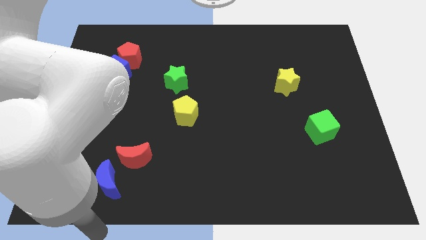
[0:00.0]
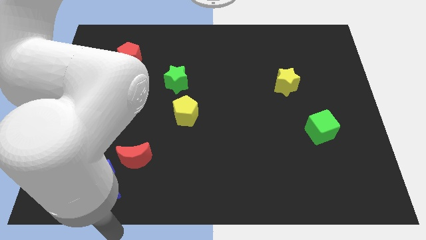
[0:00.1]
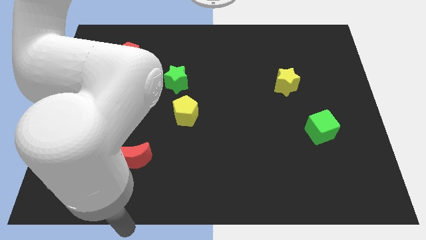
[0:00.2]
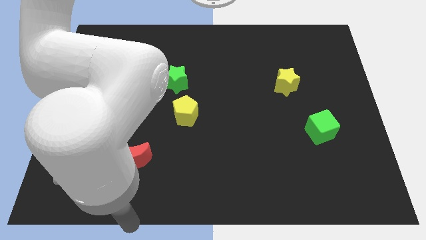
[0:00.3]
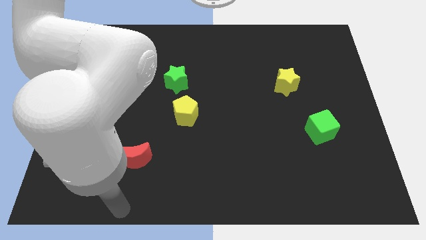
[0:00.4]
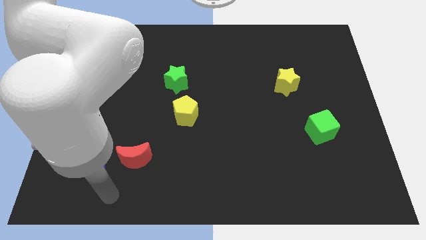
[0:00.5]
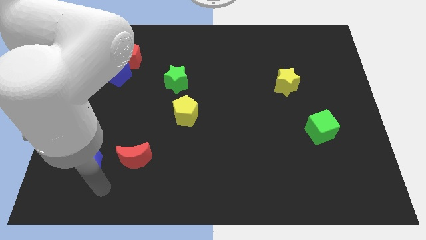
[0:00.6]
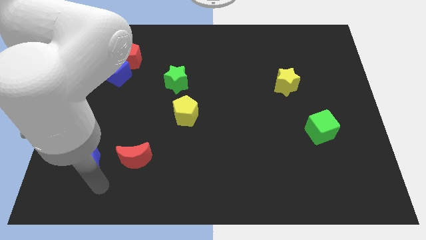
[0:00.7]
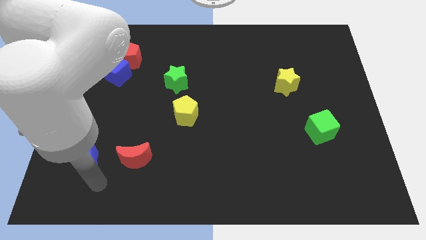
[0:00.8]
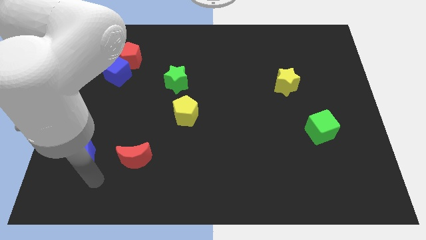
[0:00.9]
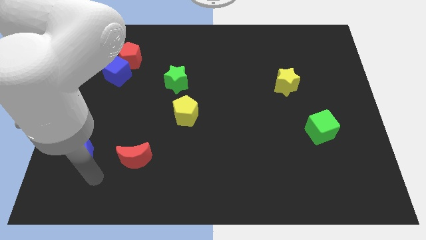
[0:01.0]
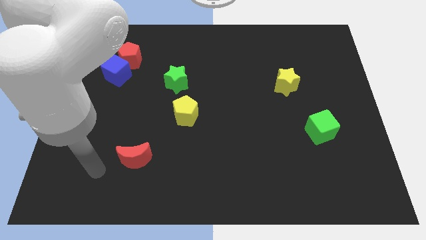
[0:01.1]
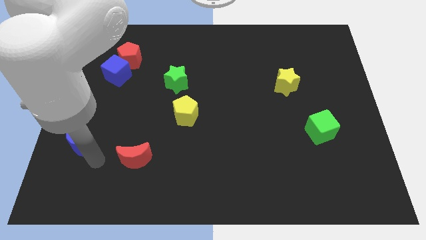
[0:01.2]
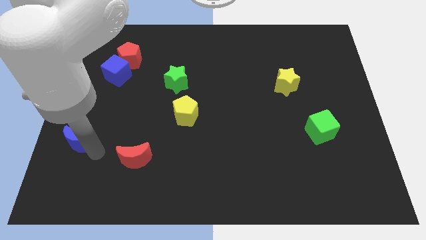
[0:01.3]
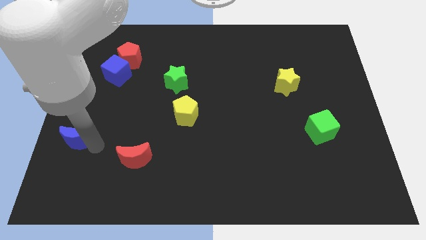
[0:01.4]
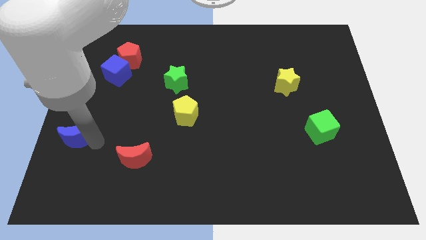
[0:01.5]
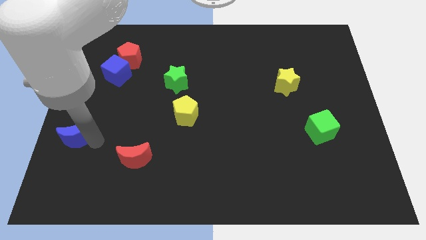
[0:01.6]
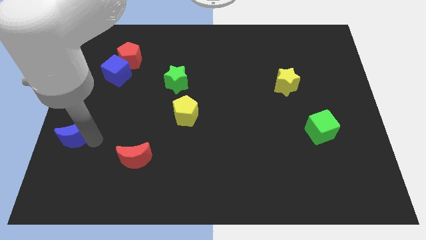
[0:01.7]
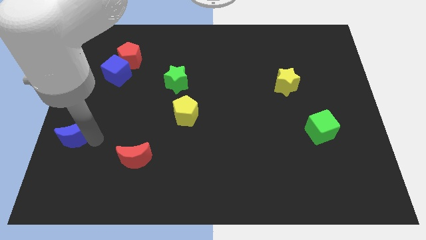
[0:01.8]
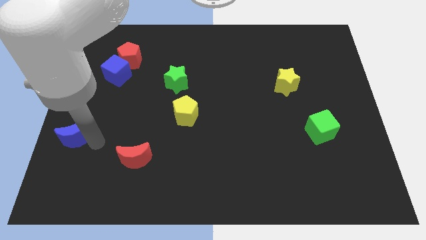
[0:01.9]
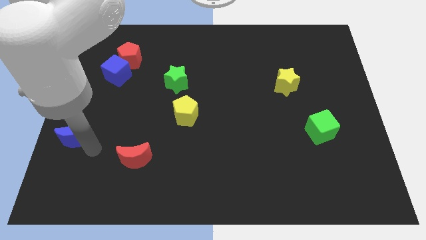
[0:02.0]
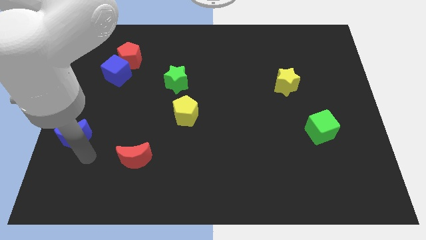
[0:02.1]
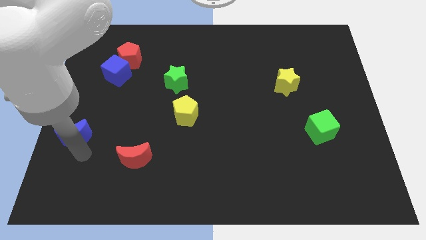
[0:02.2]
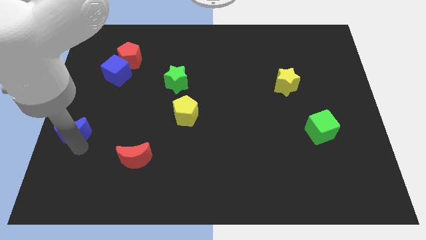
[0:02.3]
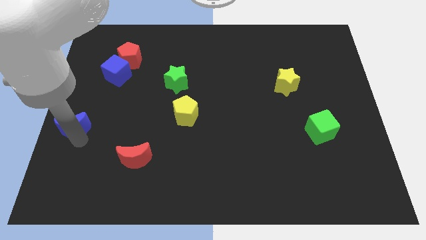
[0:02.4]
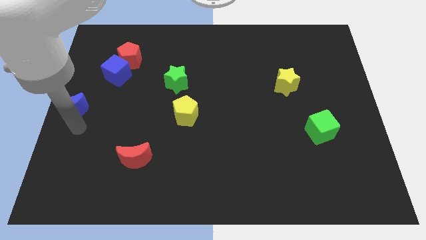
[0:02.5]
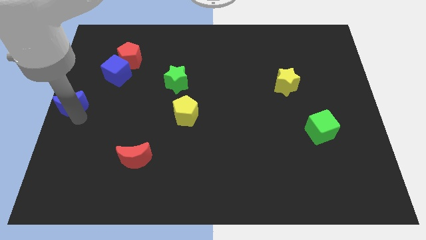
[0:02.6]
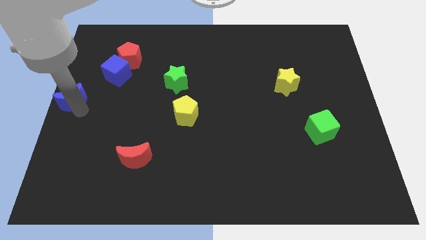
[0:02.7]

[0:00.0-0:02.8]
place blue moon to the left center of the board

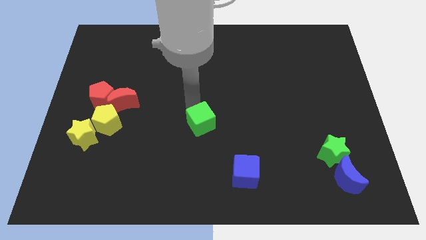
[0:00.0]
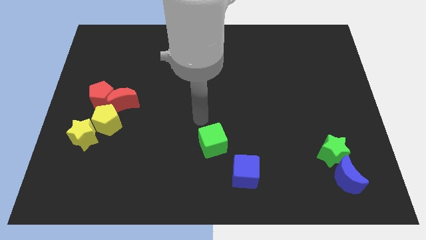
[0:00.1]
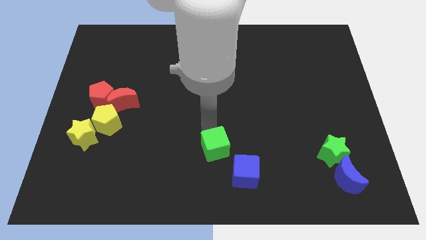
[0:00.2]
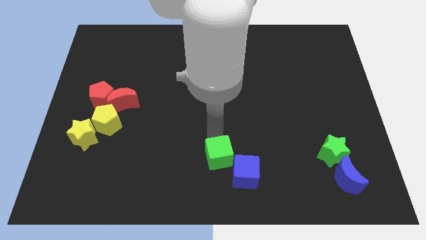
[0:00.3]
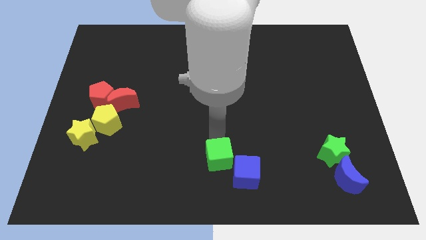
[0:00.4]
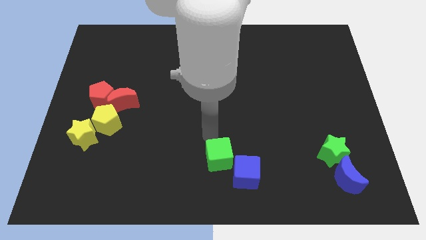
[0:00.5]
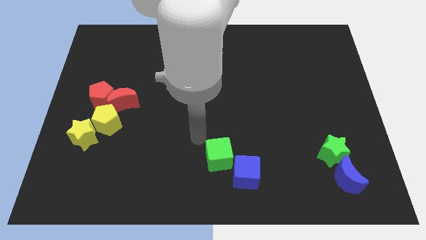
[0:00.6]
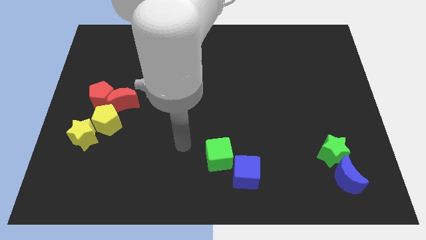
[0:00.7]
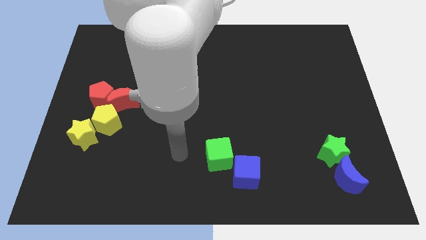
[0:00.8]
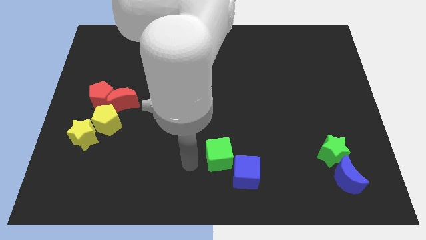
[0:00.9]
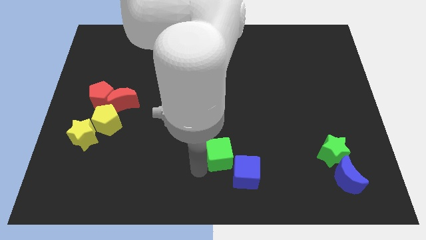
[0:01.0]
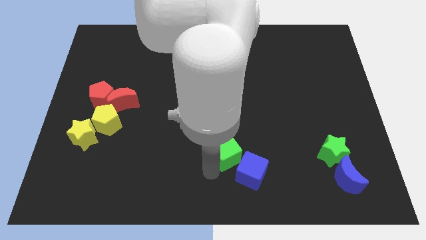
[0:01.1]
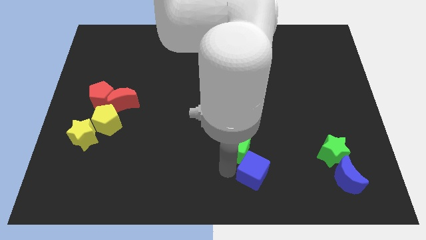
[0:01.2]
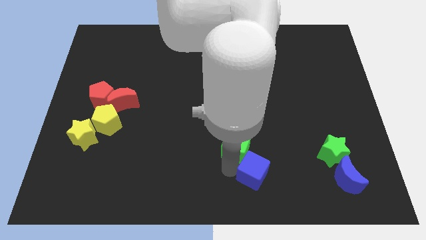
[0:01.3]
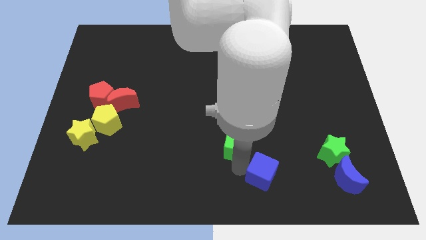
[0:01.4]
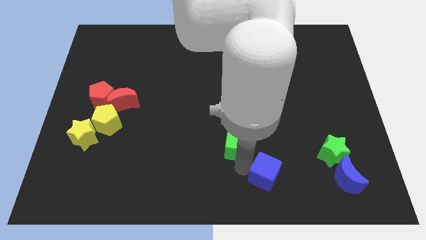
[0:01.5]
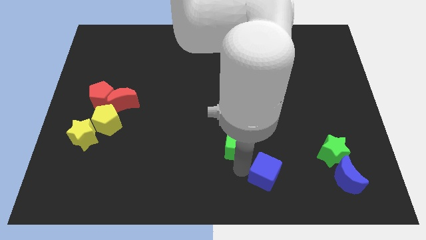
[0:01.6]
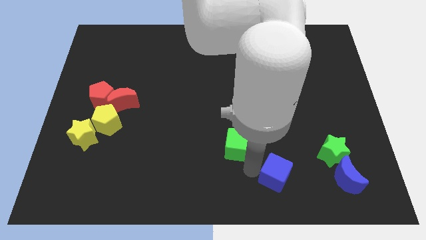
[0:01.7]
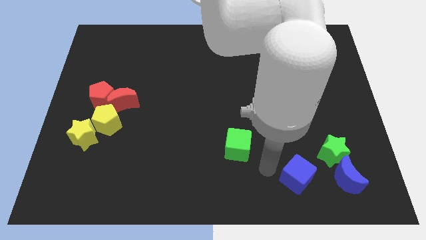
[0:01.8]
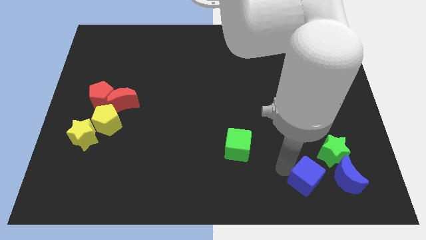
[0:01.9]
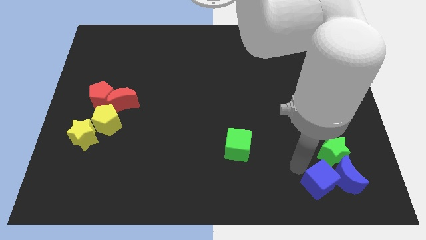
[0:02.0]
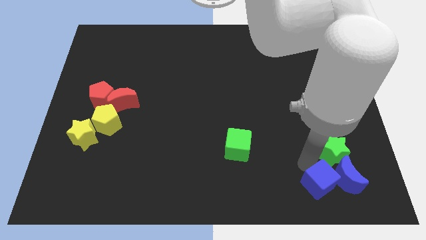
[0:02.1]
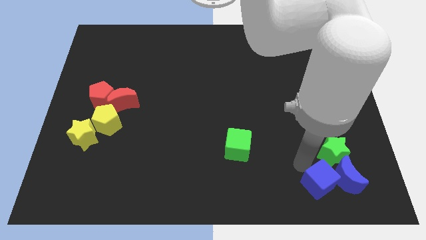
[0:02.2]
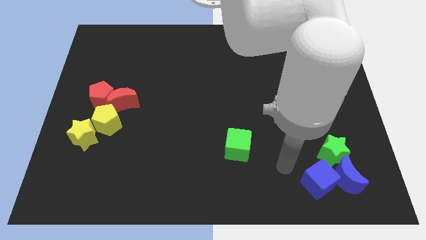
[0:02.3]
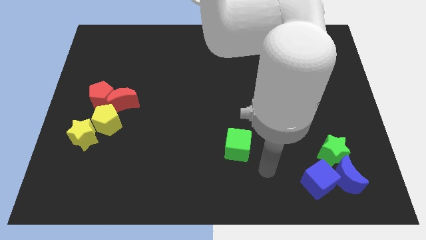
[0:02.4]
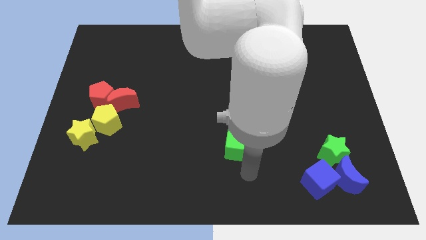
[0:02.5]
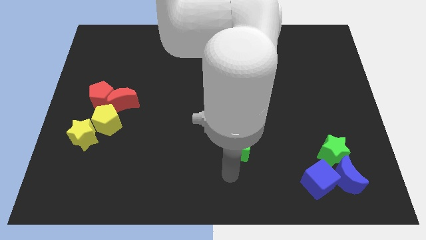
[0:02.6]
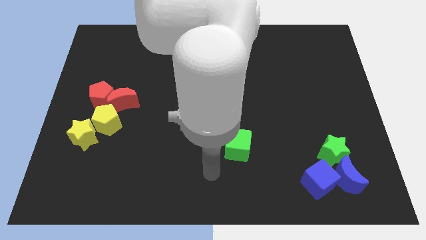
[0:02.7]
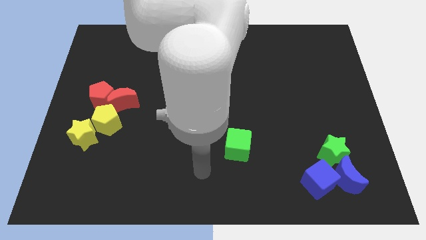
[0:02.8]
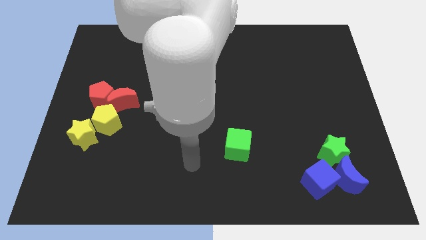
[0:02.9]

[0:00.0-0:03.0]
move the blue cube into the blue crescent

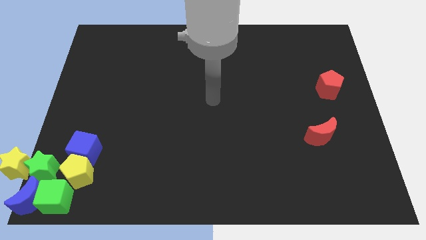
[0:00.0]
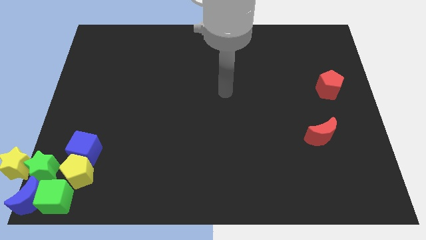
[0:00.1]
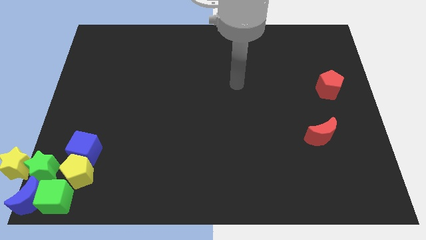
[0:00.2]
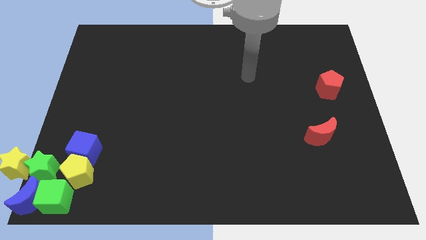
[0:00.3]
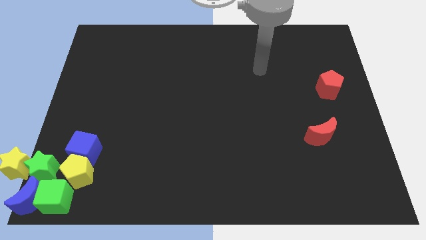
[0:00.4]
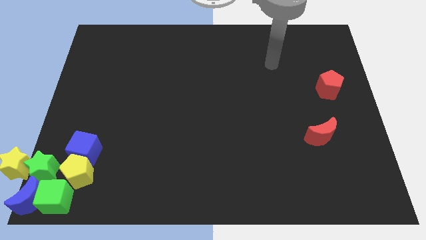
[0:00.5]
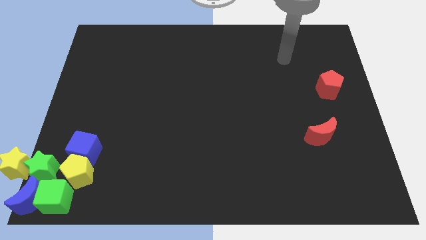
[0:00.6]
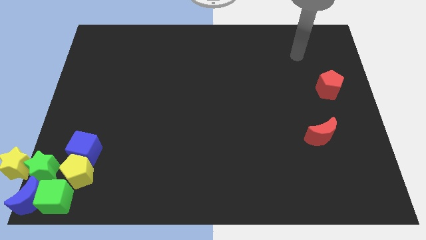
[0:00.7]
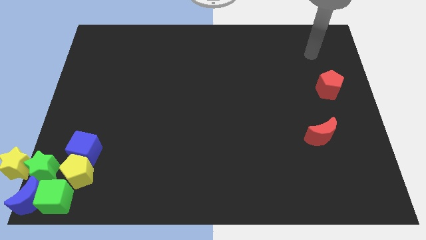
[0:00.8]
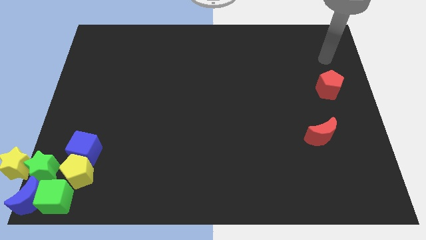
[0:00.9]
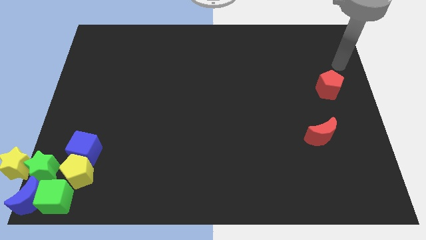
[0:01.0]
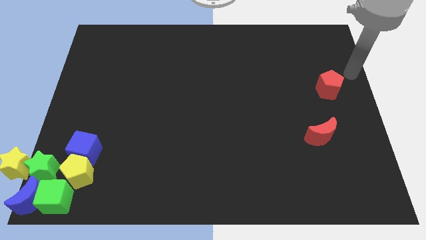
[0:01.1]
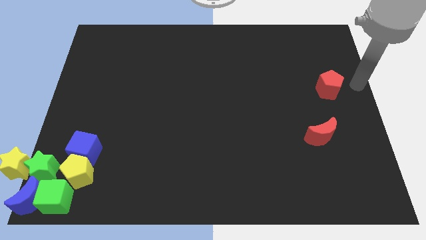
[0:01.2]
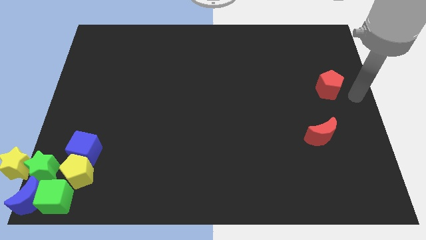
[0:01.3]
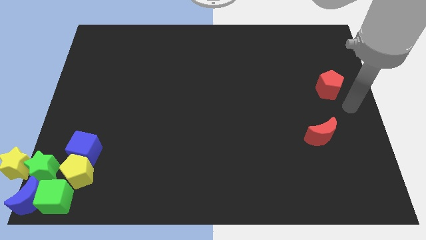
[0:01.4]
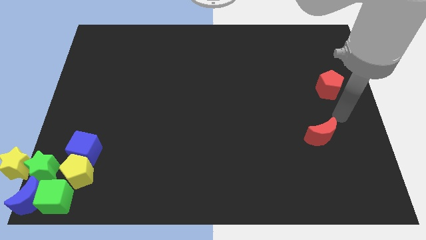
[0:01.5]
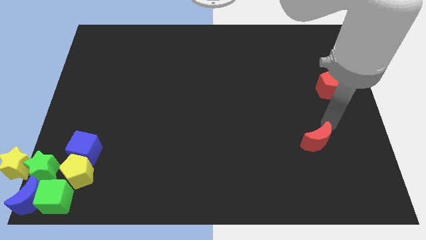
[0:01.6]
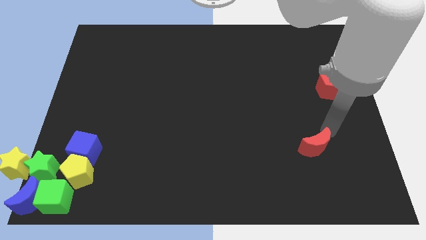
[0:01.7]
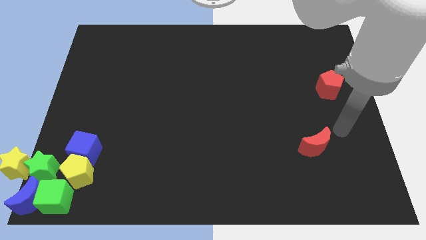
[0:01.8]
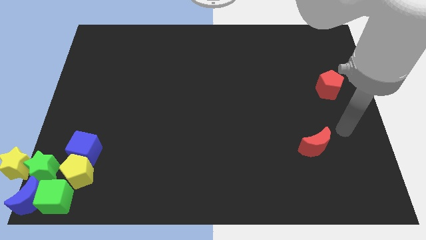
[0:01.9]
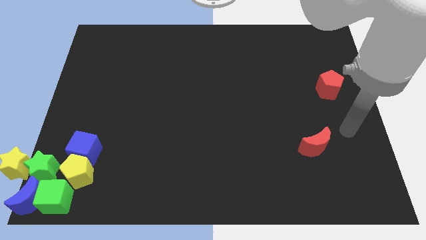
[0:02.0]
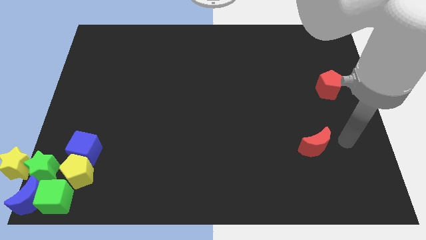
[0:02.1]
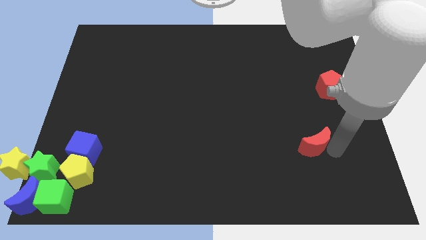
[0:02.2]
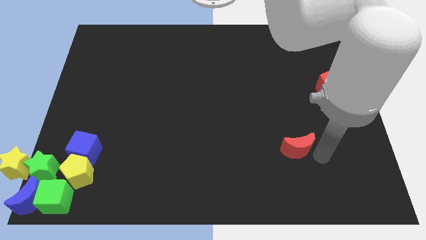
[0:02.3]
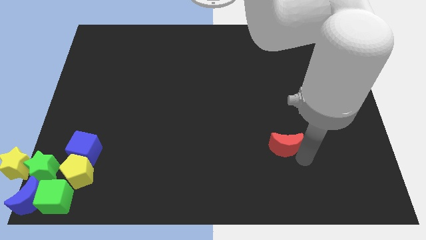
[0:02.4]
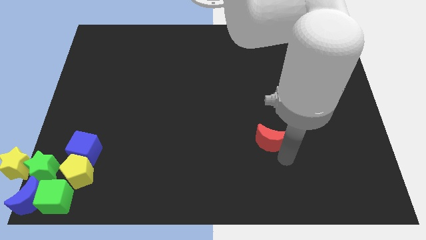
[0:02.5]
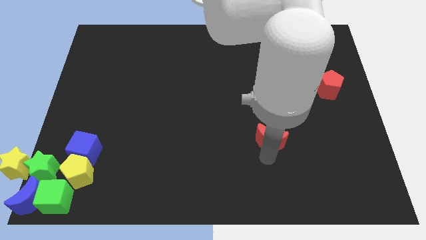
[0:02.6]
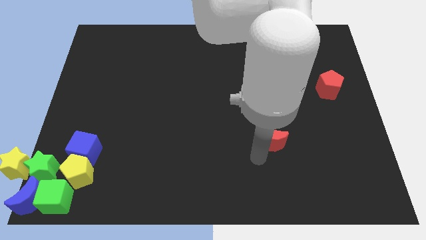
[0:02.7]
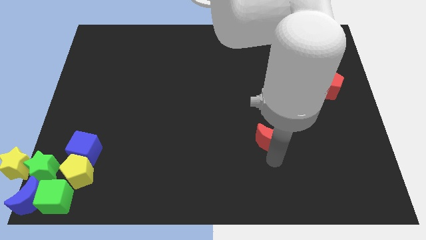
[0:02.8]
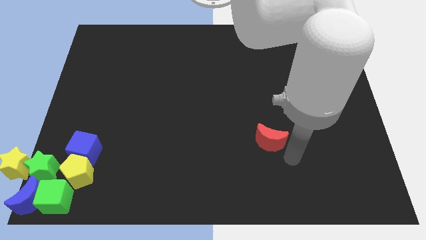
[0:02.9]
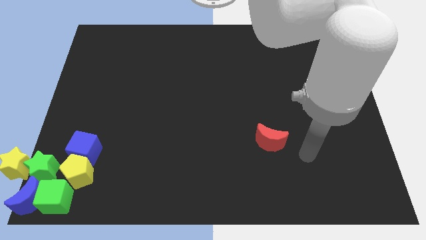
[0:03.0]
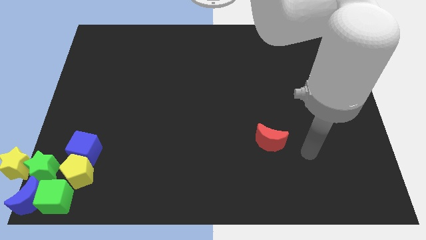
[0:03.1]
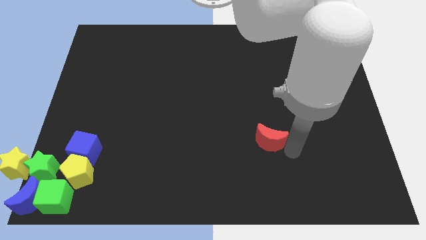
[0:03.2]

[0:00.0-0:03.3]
push the red crescent slightly to the left side of the board
